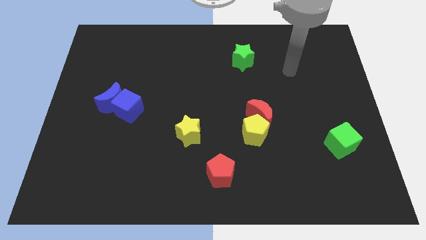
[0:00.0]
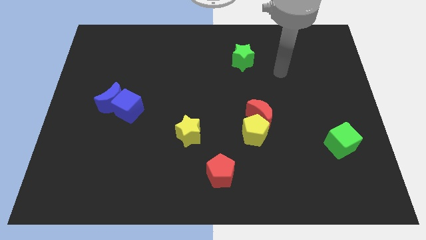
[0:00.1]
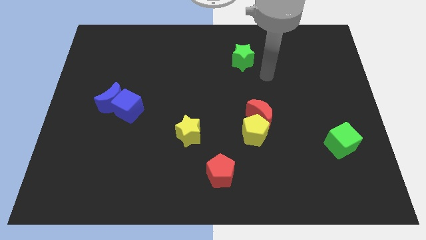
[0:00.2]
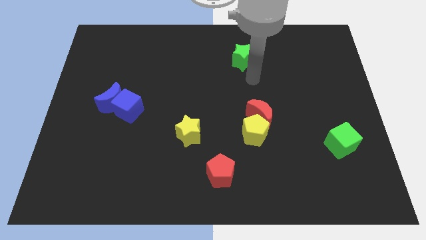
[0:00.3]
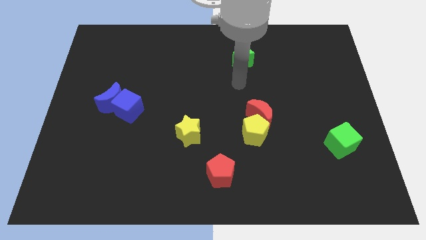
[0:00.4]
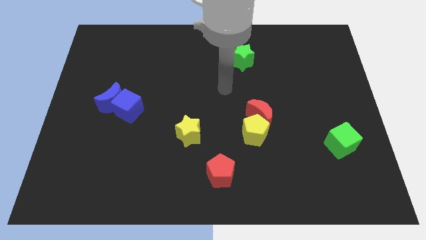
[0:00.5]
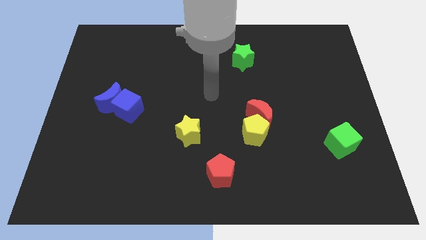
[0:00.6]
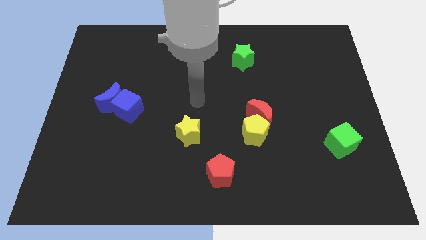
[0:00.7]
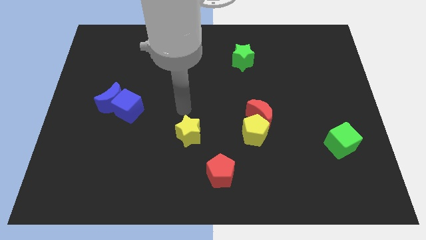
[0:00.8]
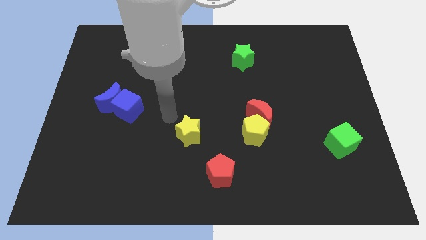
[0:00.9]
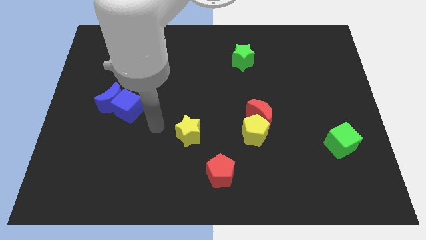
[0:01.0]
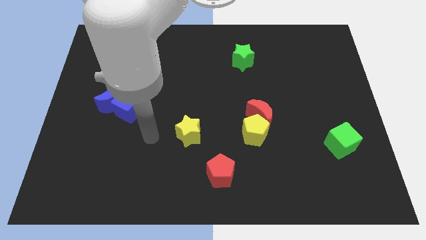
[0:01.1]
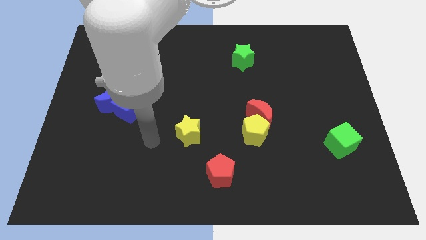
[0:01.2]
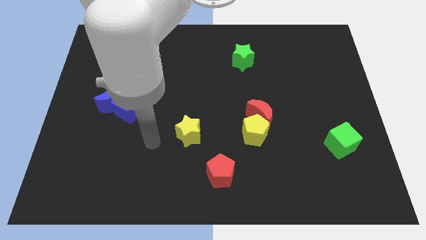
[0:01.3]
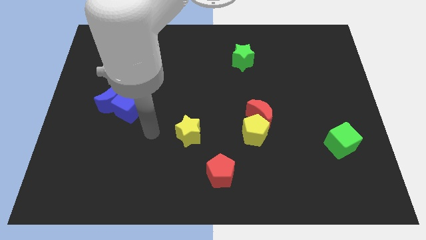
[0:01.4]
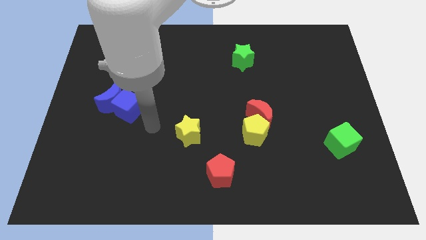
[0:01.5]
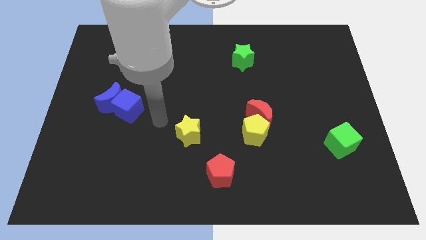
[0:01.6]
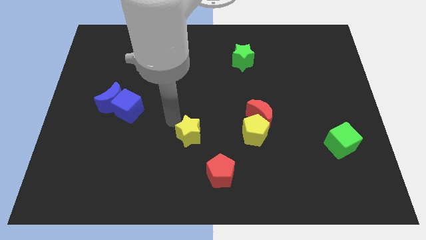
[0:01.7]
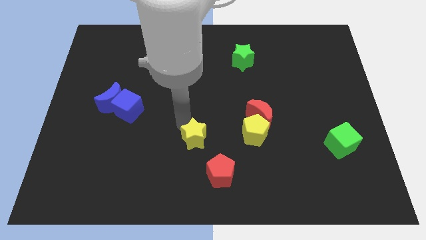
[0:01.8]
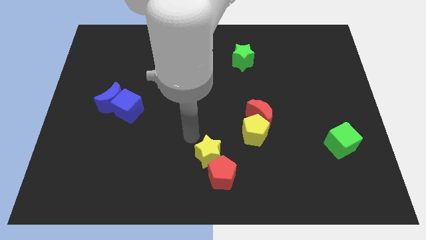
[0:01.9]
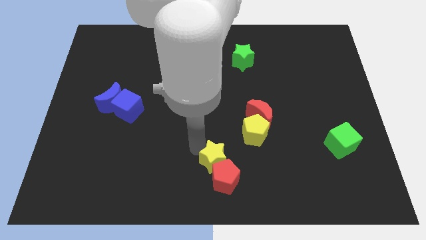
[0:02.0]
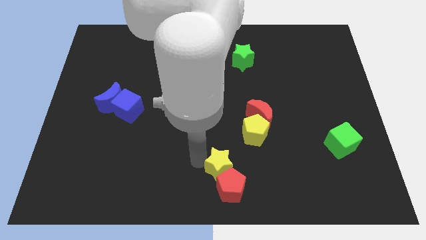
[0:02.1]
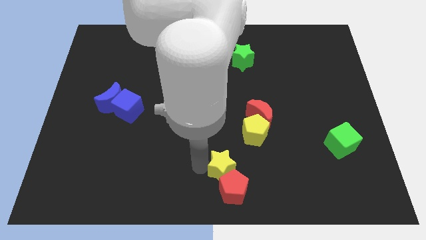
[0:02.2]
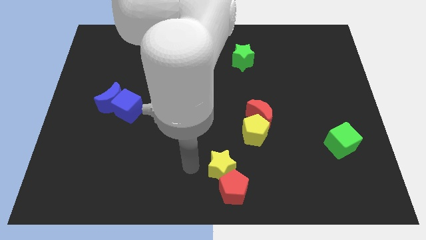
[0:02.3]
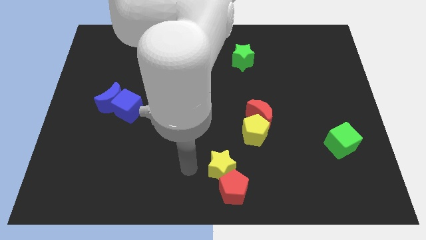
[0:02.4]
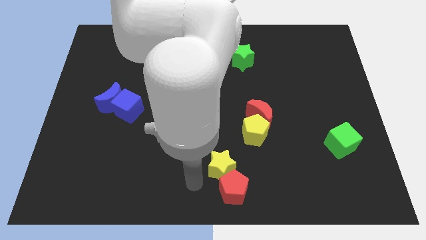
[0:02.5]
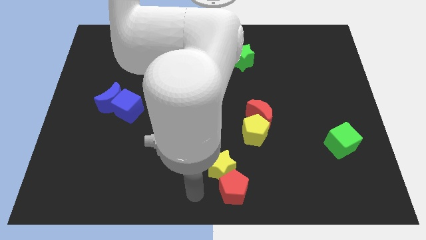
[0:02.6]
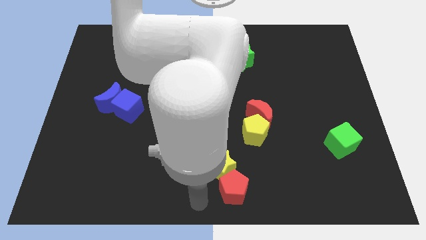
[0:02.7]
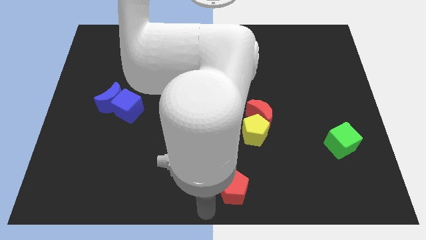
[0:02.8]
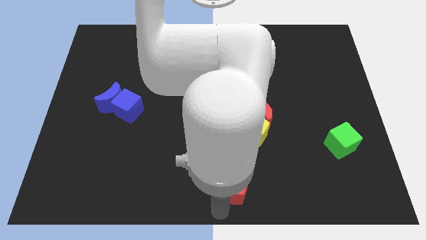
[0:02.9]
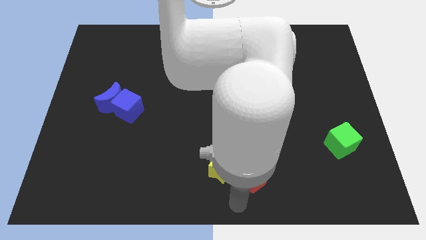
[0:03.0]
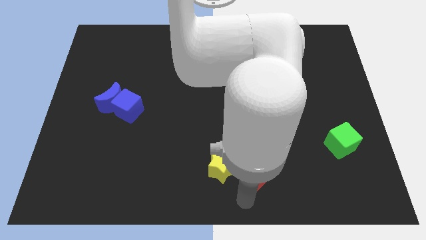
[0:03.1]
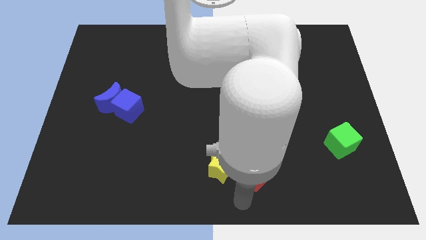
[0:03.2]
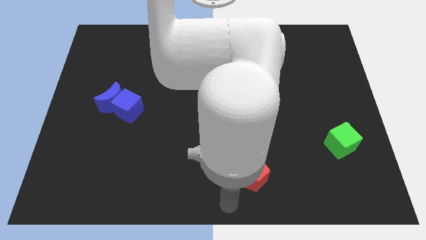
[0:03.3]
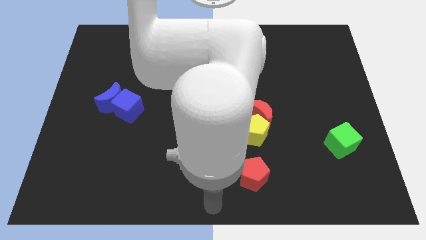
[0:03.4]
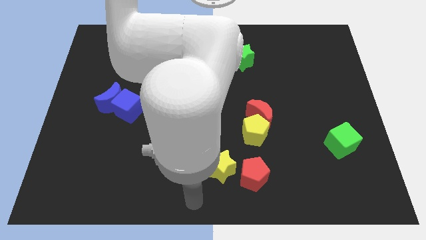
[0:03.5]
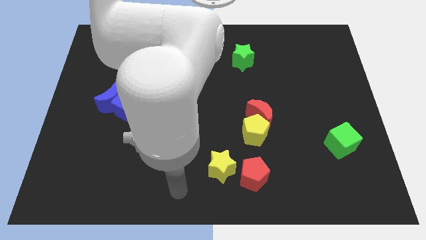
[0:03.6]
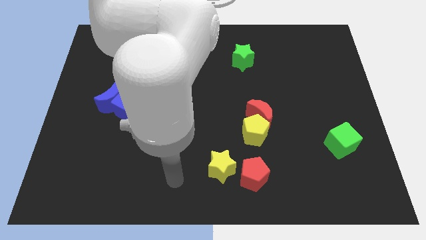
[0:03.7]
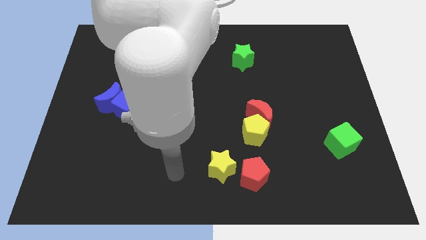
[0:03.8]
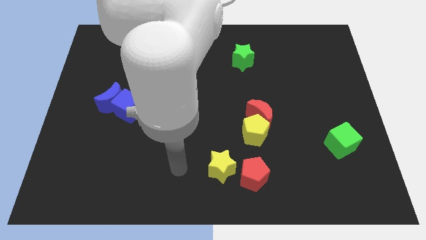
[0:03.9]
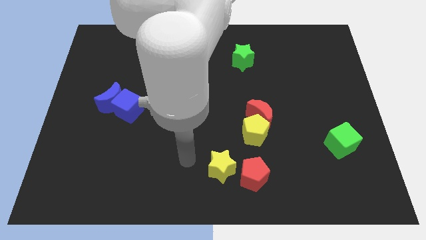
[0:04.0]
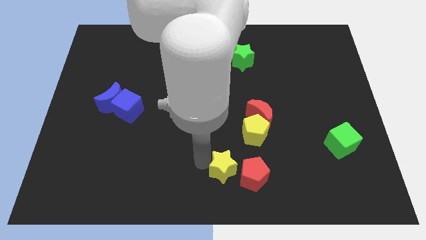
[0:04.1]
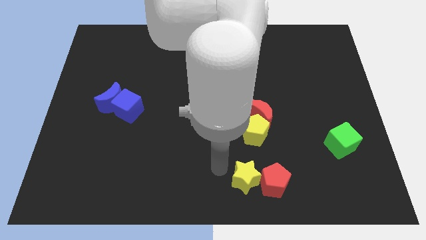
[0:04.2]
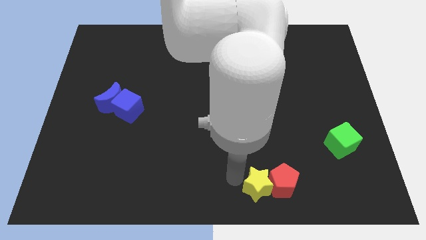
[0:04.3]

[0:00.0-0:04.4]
slide the yellow star to the left side of the red pentagon

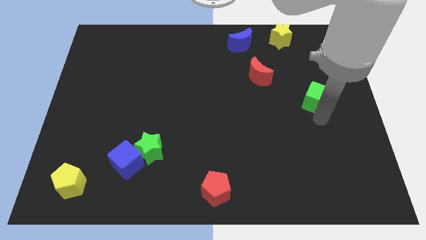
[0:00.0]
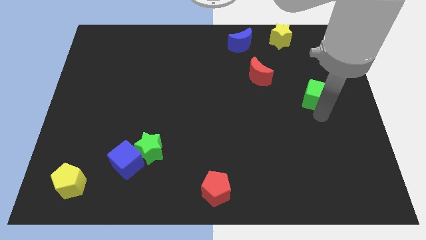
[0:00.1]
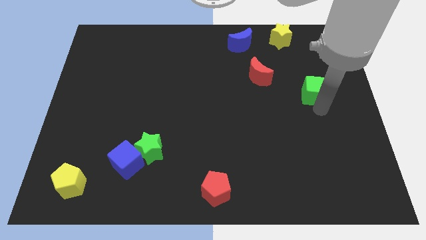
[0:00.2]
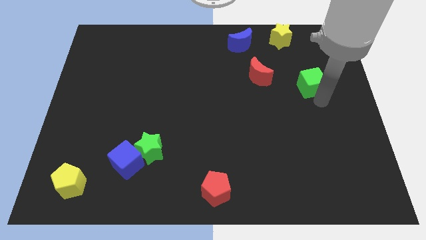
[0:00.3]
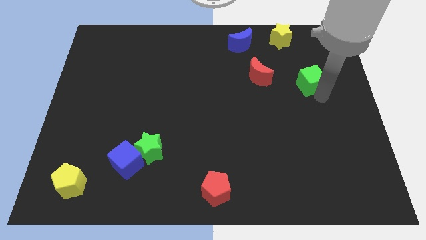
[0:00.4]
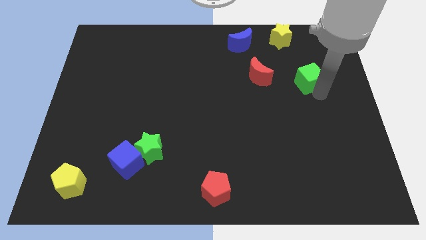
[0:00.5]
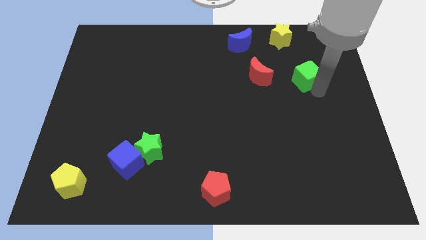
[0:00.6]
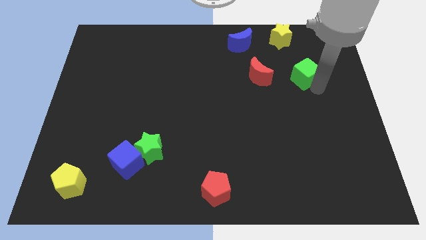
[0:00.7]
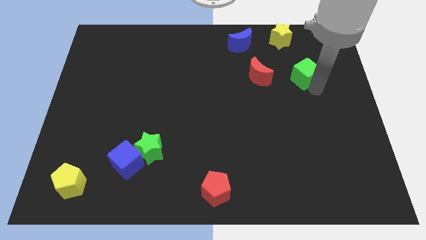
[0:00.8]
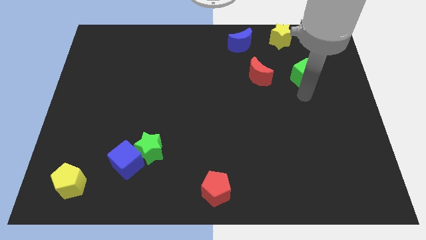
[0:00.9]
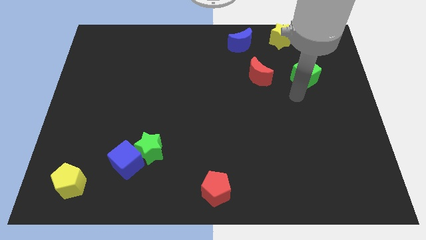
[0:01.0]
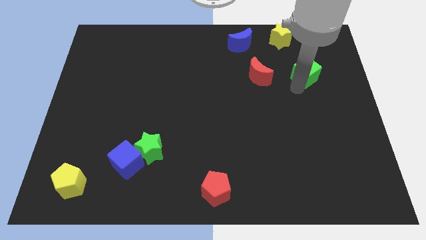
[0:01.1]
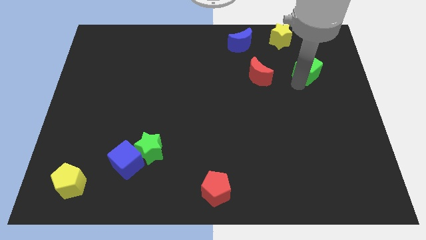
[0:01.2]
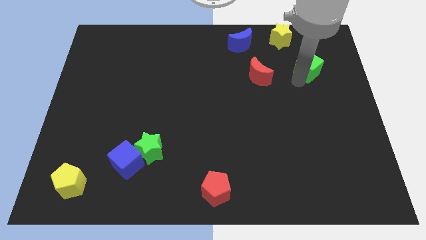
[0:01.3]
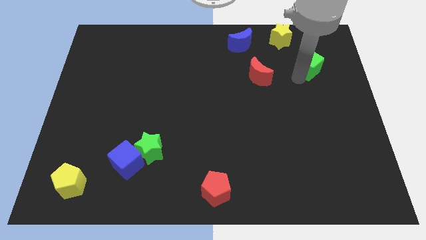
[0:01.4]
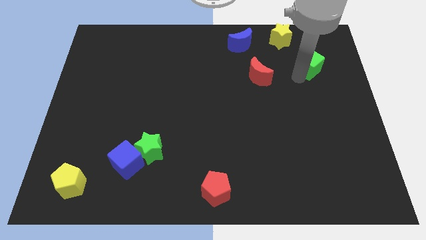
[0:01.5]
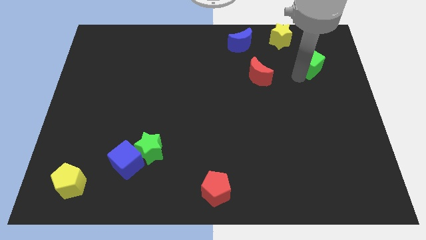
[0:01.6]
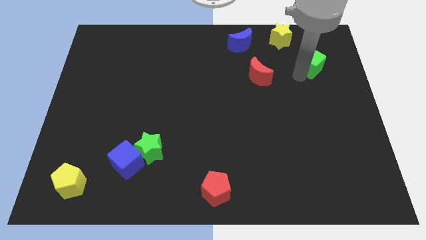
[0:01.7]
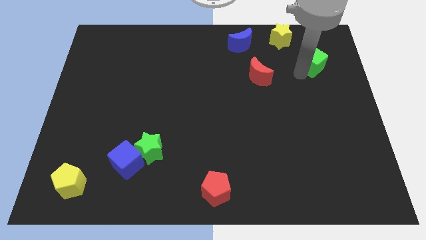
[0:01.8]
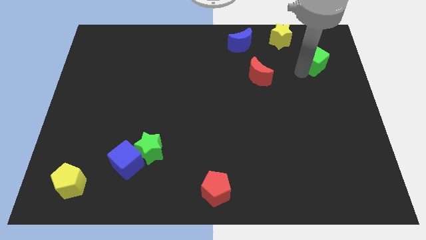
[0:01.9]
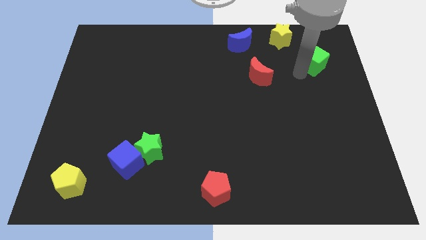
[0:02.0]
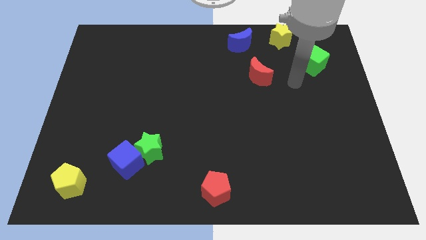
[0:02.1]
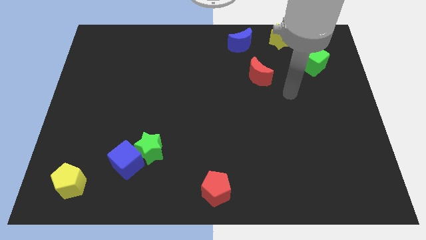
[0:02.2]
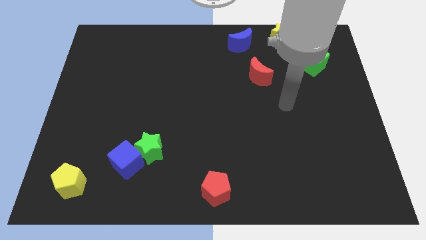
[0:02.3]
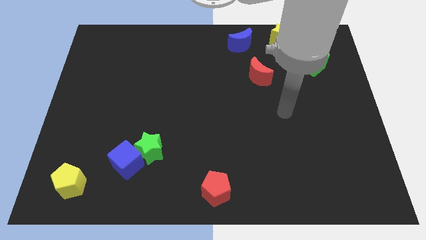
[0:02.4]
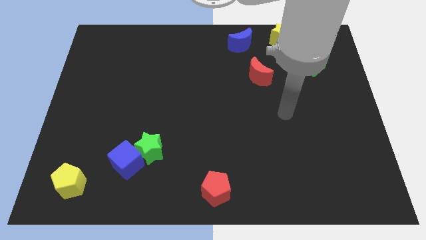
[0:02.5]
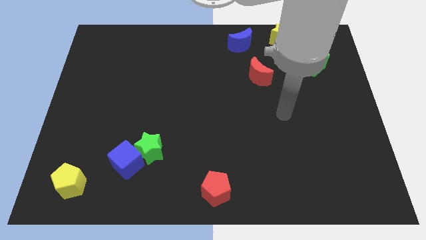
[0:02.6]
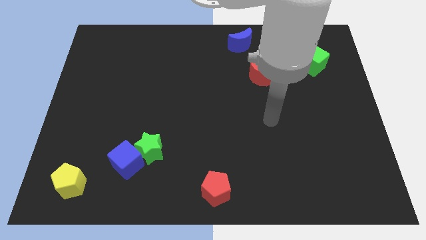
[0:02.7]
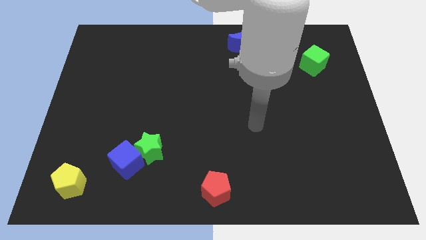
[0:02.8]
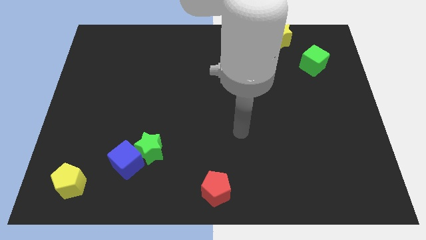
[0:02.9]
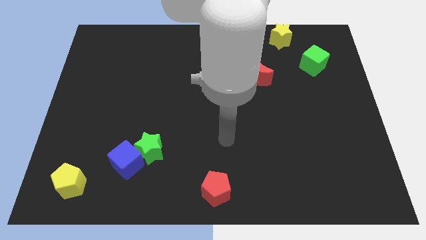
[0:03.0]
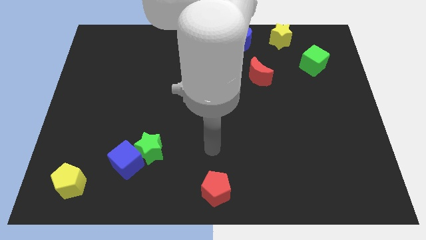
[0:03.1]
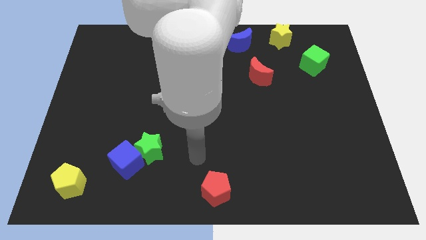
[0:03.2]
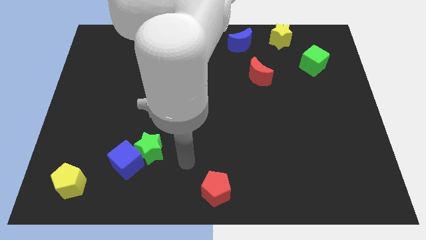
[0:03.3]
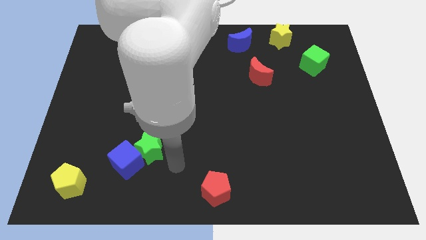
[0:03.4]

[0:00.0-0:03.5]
move the green cube to the top right side of the red crescent

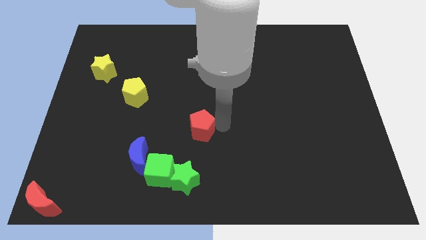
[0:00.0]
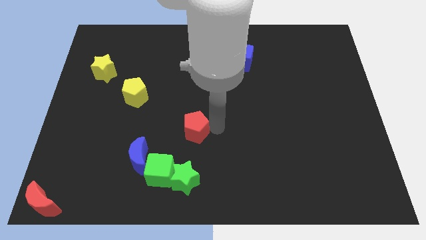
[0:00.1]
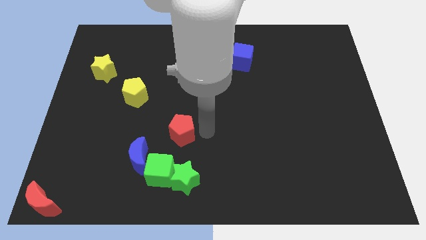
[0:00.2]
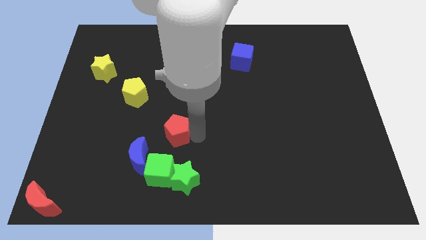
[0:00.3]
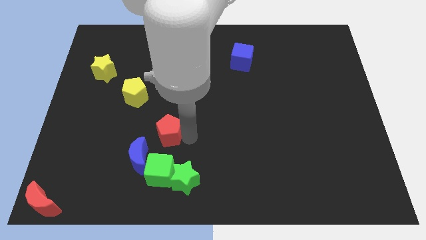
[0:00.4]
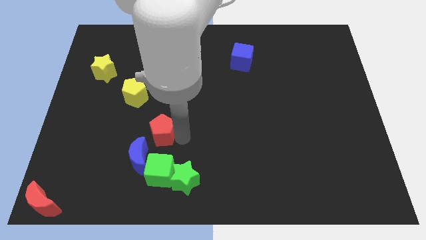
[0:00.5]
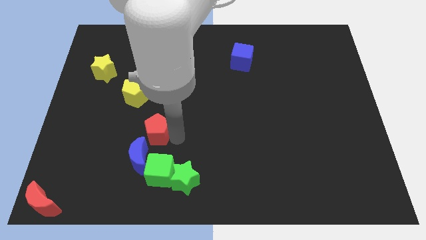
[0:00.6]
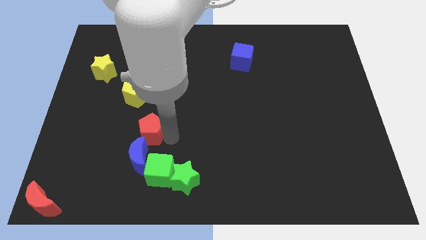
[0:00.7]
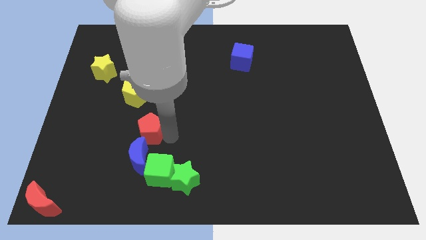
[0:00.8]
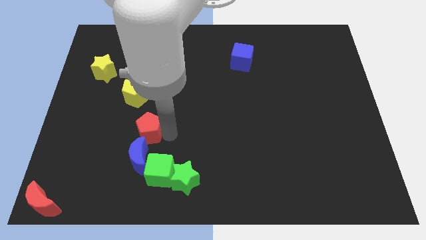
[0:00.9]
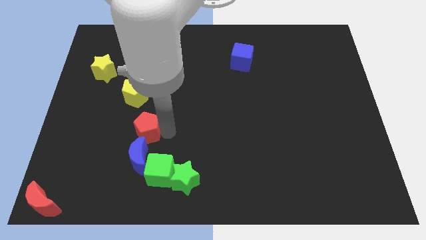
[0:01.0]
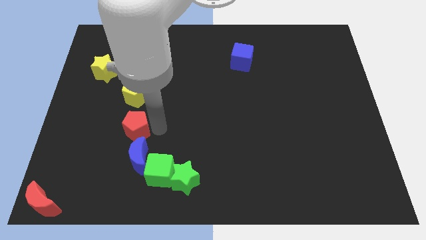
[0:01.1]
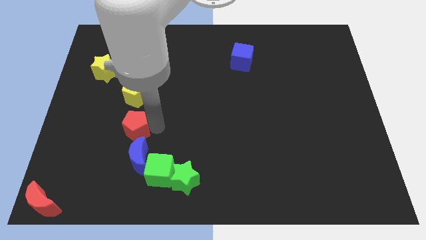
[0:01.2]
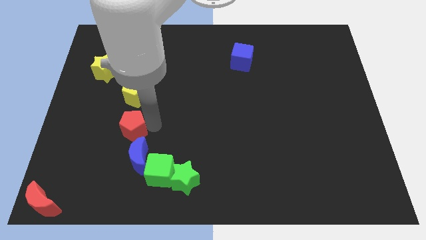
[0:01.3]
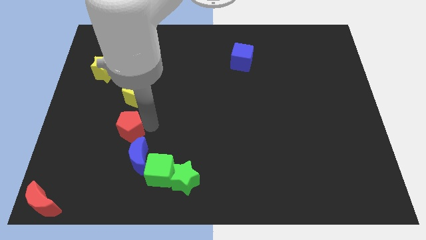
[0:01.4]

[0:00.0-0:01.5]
place red pentagon to the top of the blue crescent
